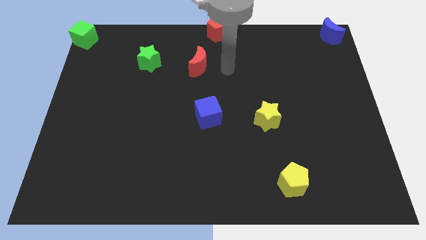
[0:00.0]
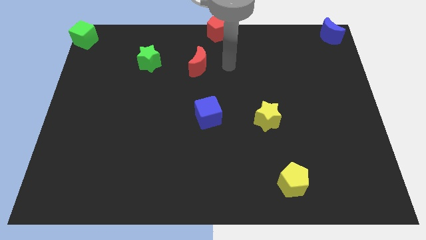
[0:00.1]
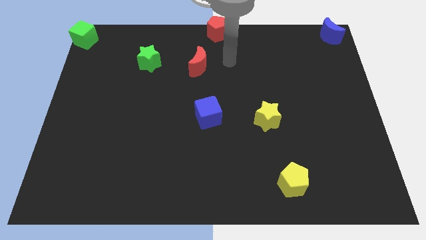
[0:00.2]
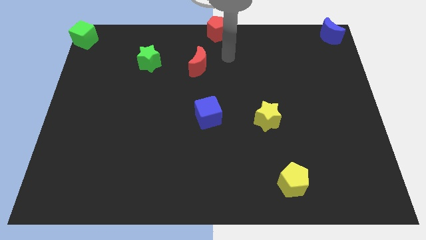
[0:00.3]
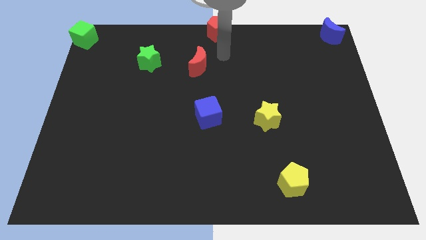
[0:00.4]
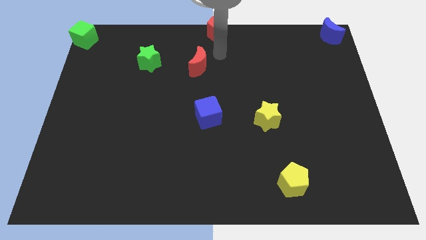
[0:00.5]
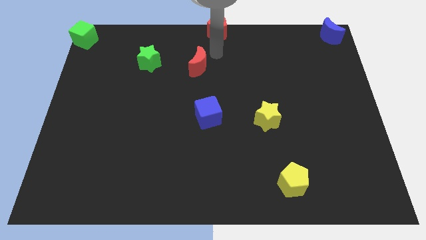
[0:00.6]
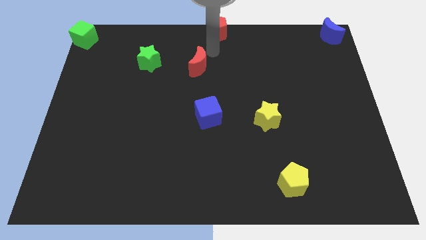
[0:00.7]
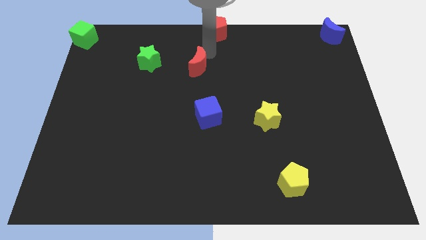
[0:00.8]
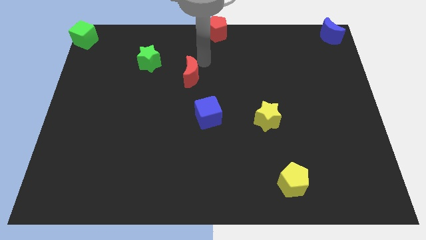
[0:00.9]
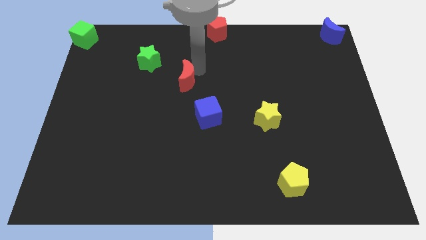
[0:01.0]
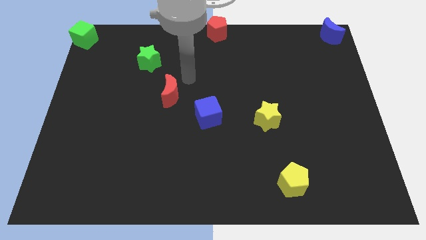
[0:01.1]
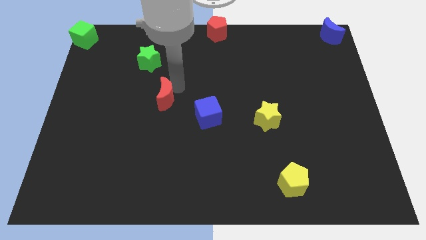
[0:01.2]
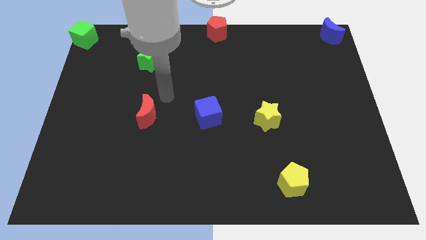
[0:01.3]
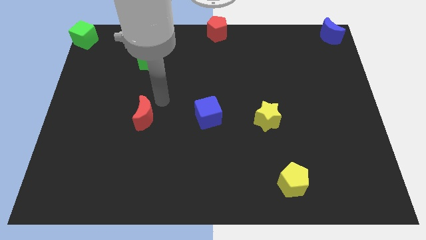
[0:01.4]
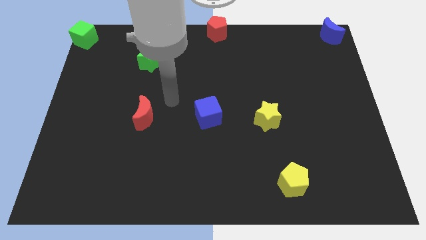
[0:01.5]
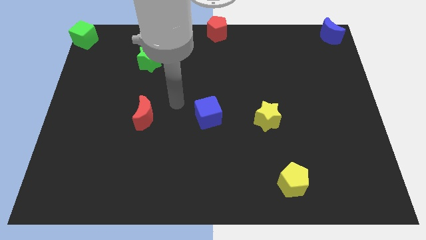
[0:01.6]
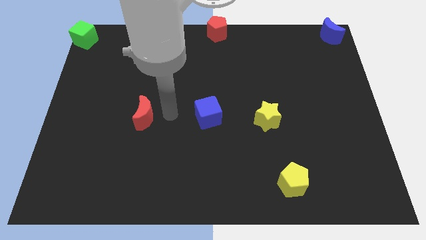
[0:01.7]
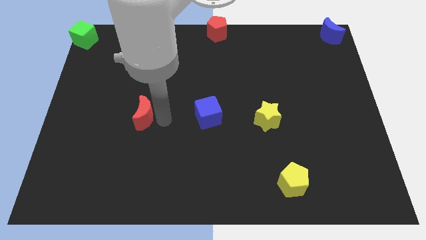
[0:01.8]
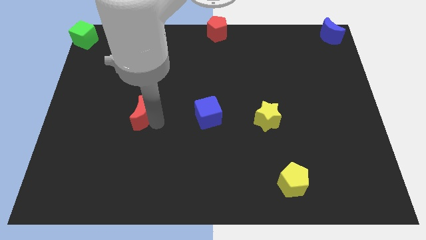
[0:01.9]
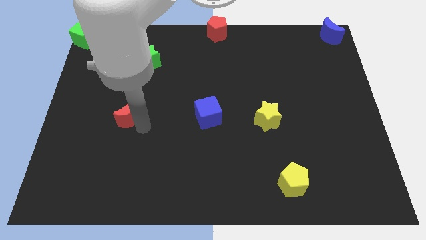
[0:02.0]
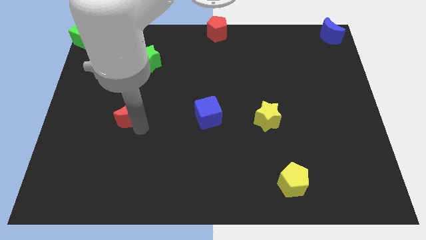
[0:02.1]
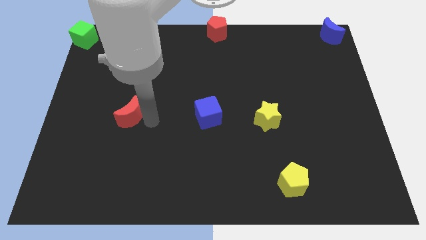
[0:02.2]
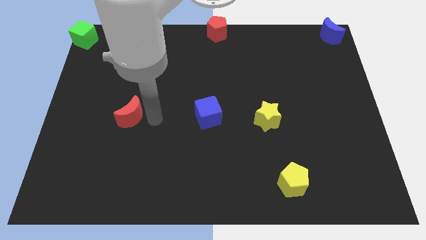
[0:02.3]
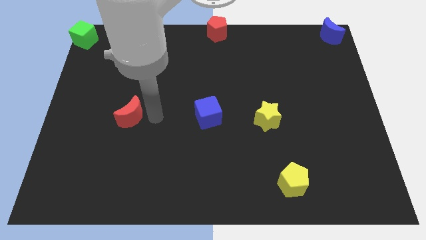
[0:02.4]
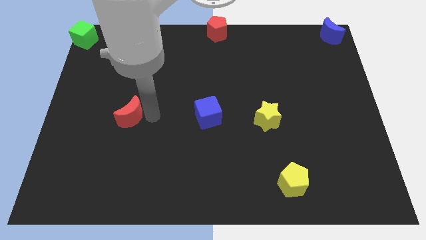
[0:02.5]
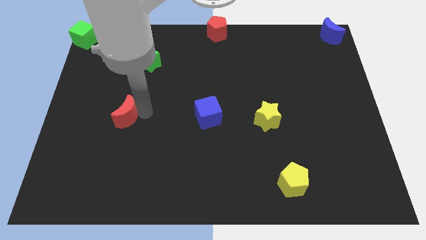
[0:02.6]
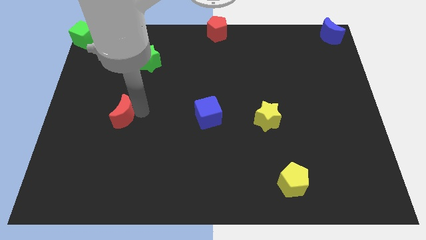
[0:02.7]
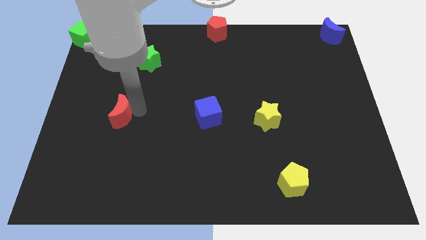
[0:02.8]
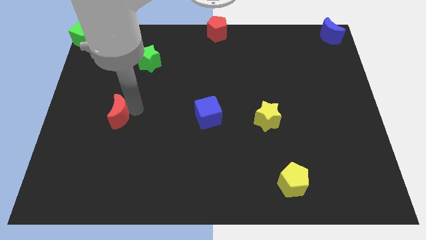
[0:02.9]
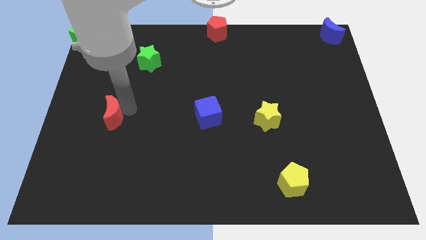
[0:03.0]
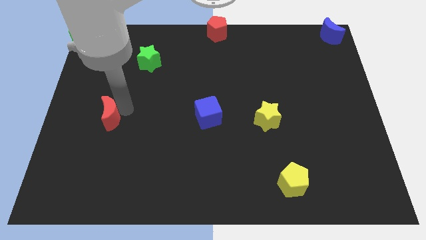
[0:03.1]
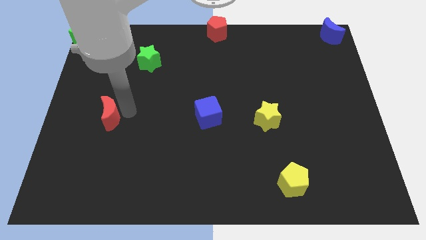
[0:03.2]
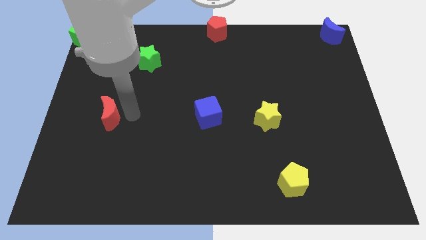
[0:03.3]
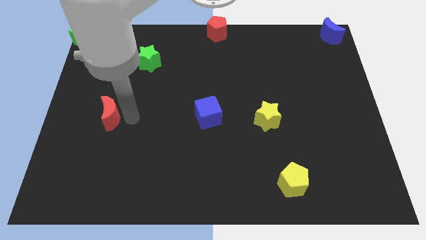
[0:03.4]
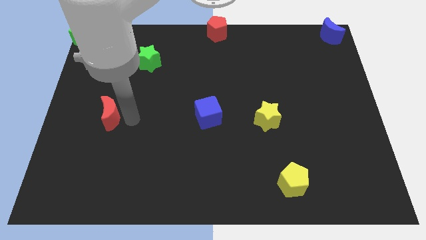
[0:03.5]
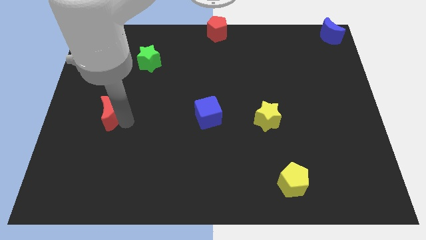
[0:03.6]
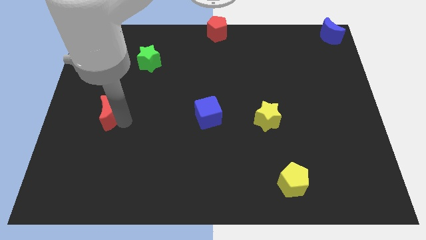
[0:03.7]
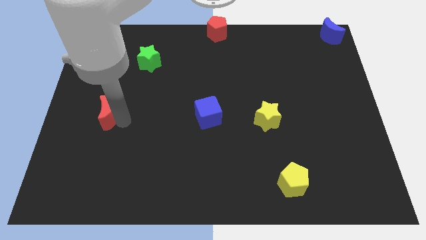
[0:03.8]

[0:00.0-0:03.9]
place the red crescent towards left center

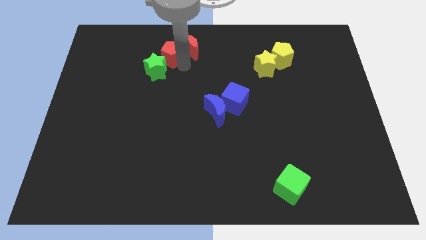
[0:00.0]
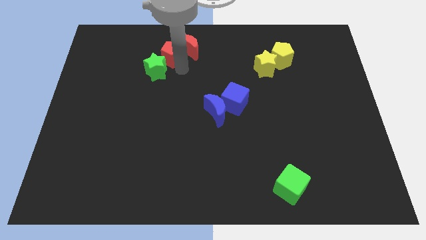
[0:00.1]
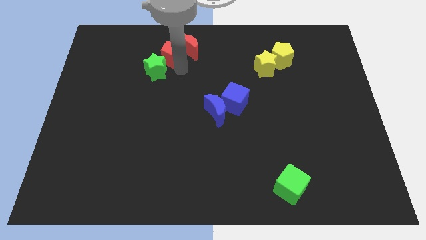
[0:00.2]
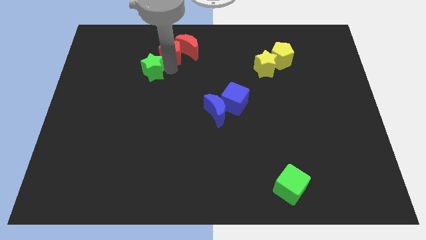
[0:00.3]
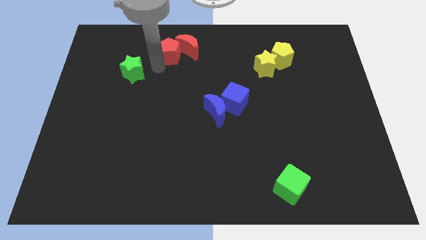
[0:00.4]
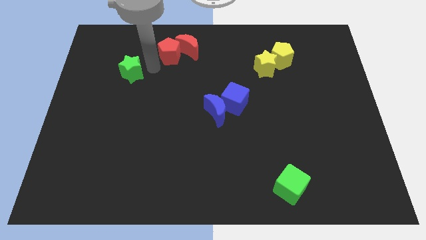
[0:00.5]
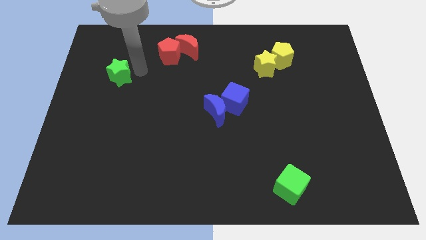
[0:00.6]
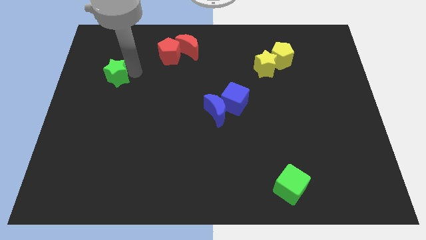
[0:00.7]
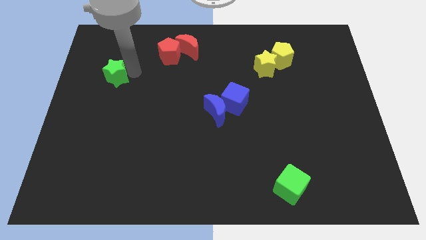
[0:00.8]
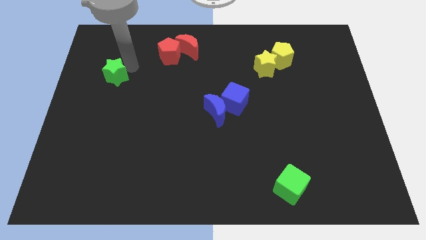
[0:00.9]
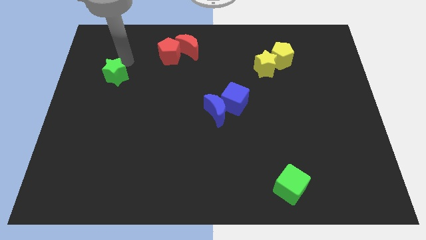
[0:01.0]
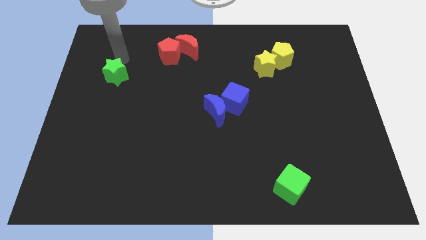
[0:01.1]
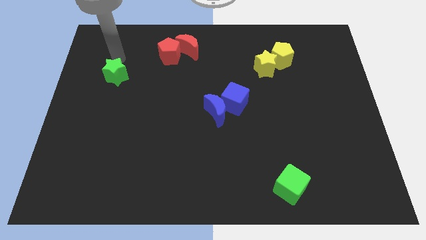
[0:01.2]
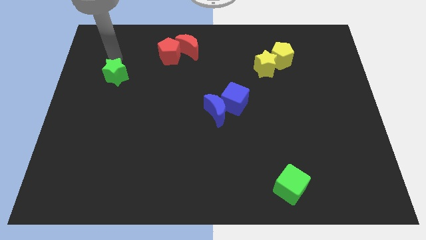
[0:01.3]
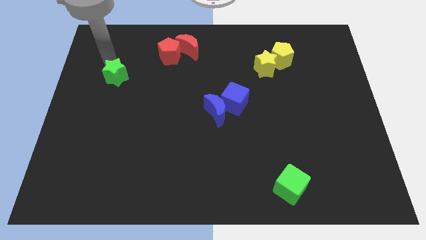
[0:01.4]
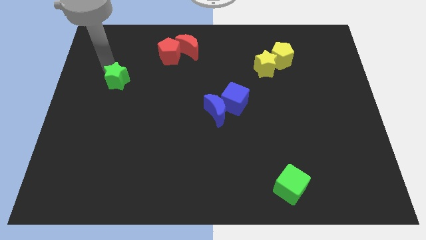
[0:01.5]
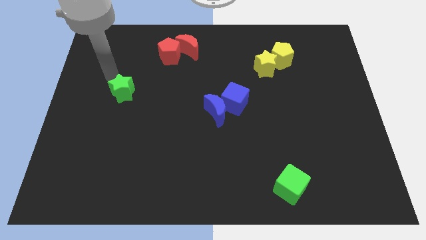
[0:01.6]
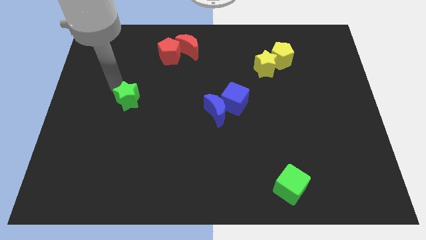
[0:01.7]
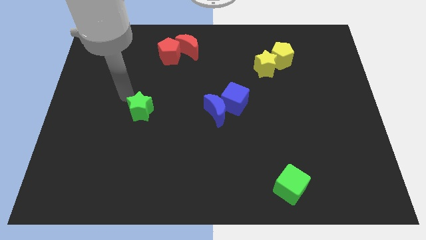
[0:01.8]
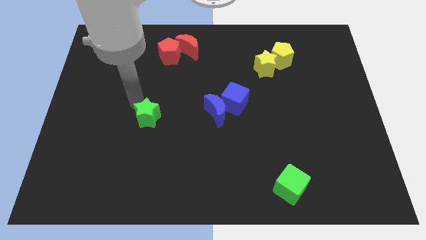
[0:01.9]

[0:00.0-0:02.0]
separate the green star to the left of blue moon

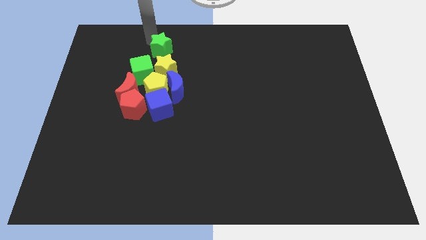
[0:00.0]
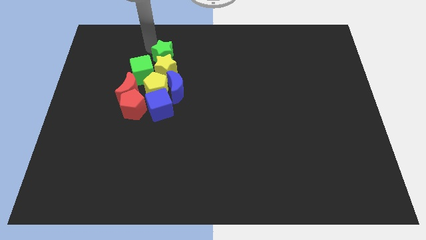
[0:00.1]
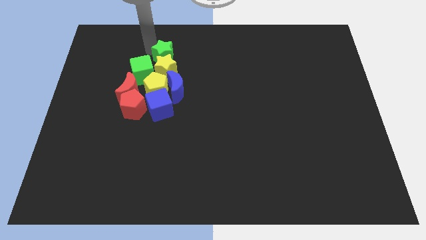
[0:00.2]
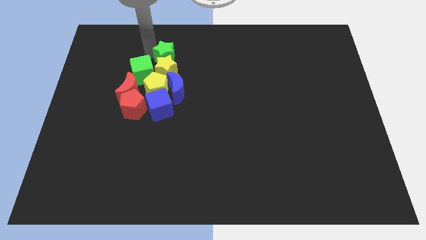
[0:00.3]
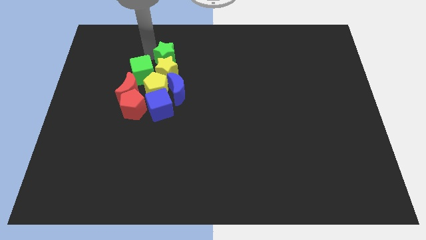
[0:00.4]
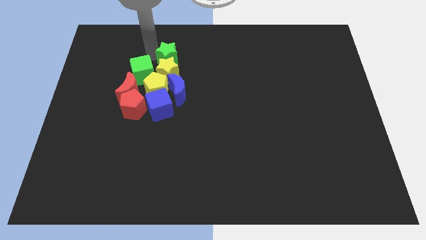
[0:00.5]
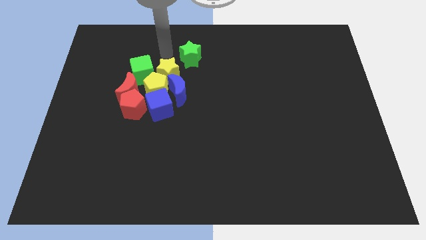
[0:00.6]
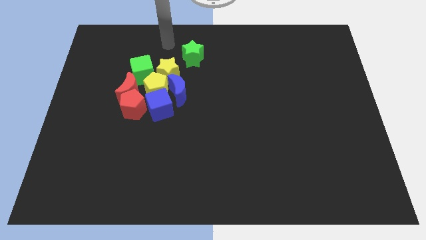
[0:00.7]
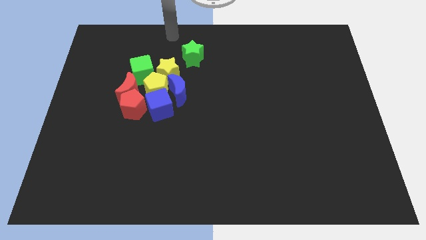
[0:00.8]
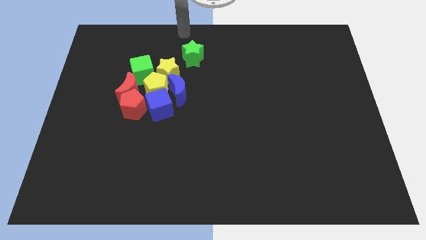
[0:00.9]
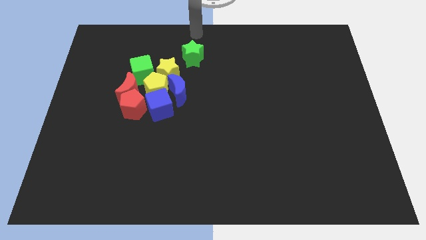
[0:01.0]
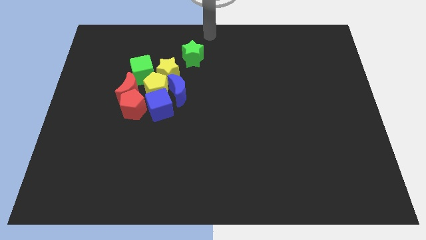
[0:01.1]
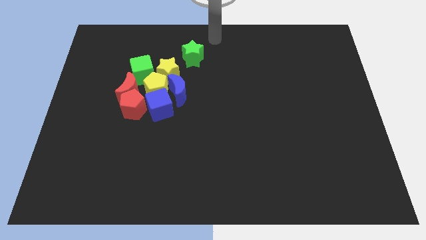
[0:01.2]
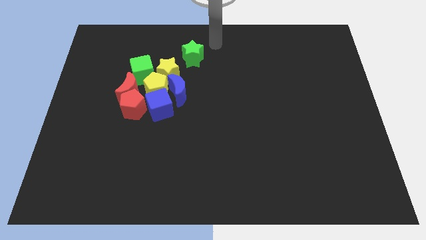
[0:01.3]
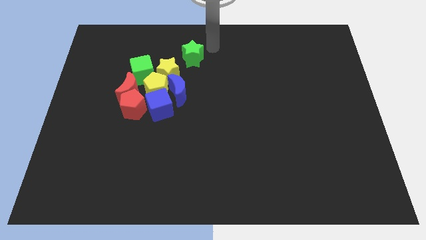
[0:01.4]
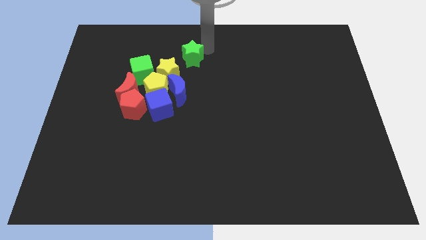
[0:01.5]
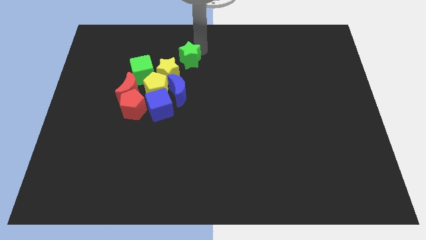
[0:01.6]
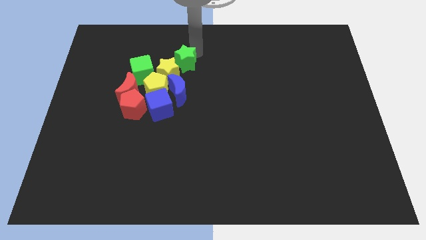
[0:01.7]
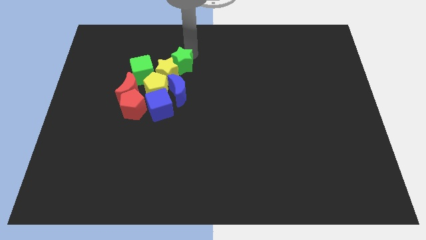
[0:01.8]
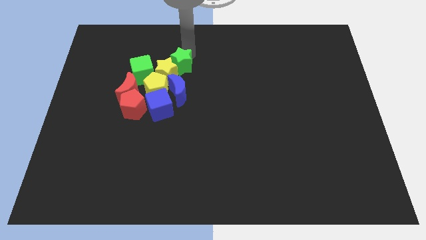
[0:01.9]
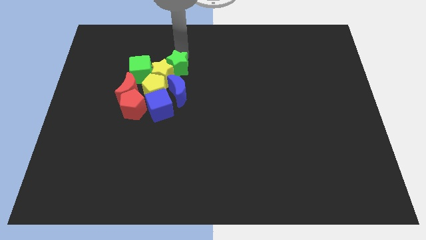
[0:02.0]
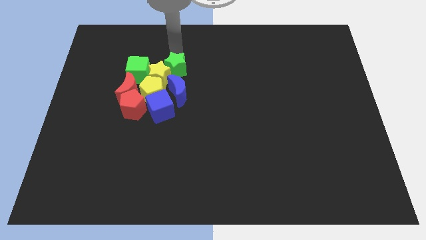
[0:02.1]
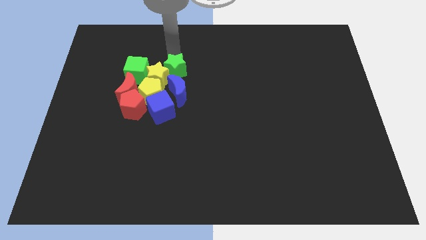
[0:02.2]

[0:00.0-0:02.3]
push the green star into the yellow star

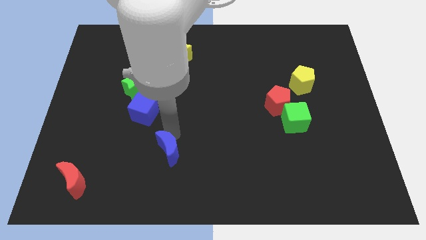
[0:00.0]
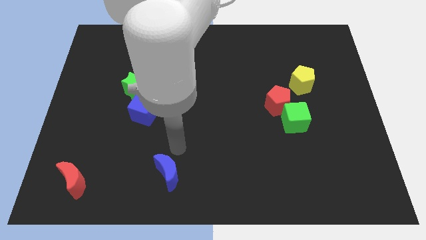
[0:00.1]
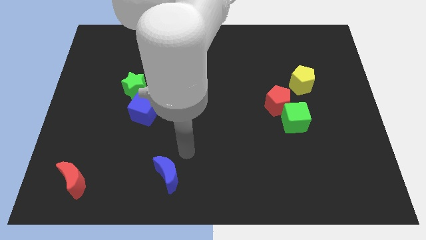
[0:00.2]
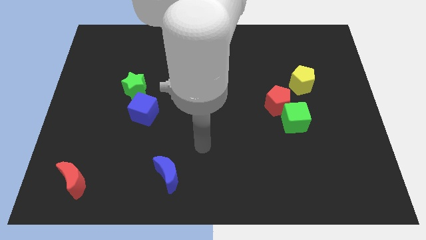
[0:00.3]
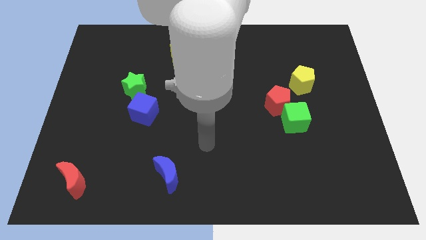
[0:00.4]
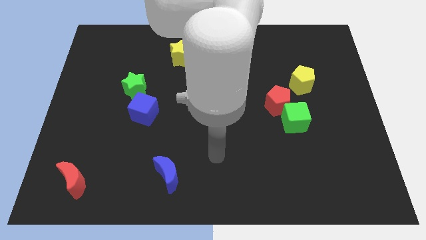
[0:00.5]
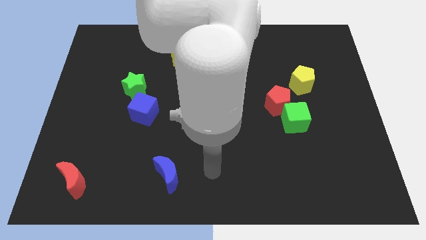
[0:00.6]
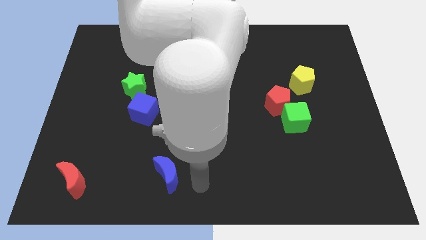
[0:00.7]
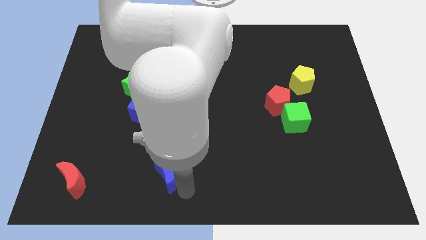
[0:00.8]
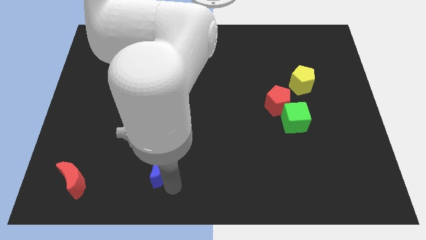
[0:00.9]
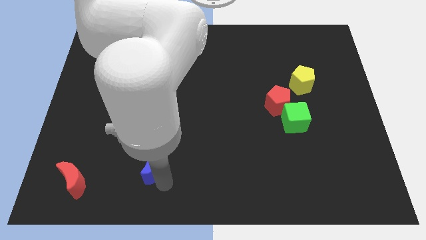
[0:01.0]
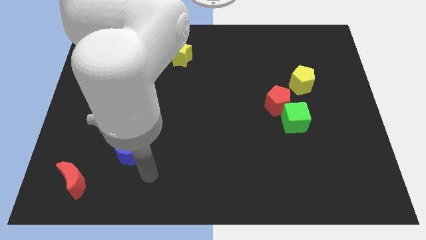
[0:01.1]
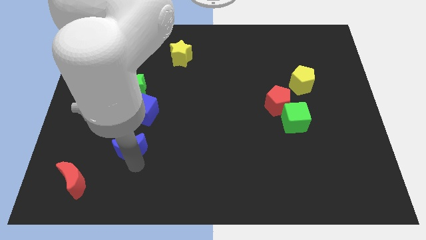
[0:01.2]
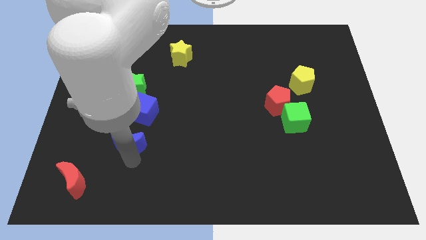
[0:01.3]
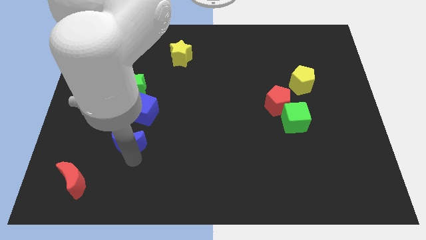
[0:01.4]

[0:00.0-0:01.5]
place the blue moon below the blue cube
